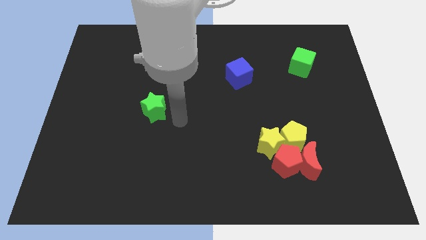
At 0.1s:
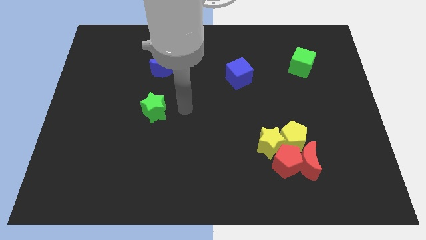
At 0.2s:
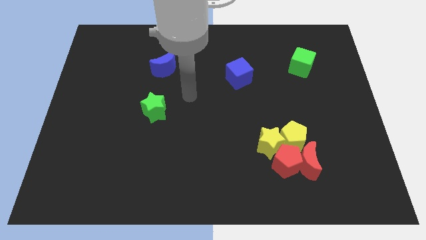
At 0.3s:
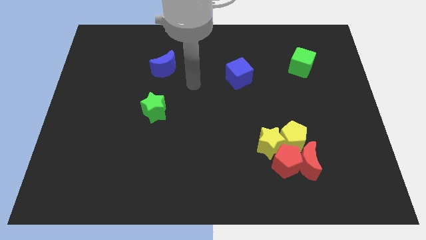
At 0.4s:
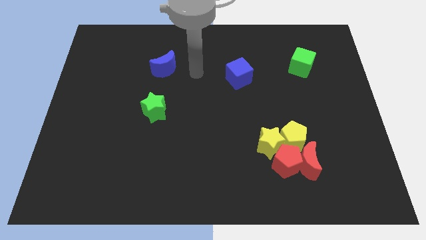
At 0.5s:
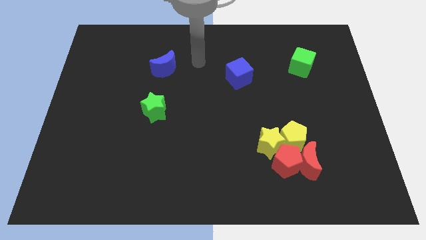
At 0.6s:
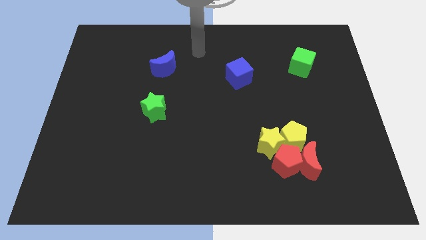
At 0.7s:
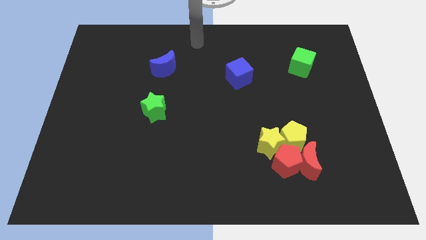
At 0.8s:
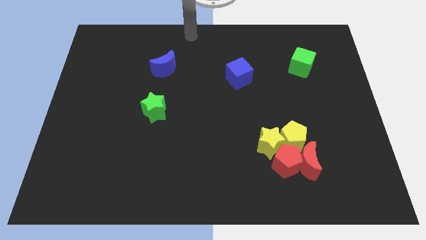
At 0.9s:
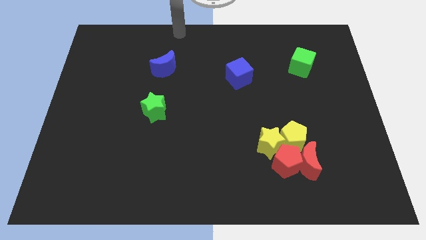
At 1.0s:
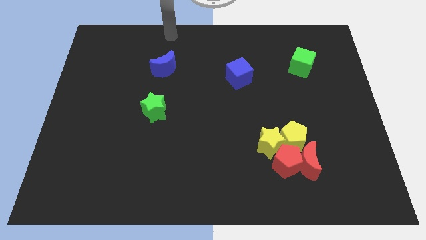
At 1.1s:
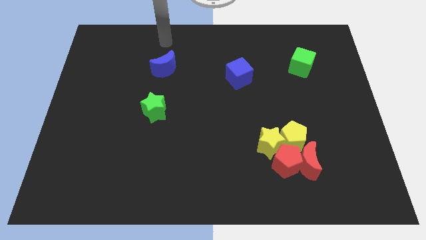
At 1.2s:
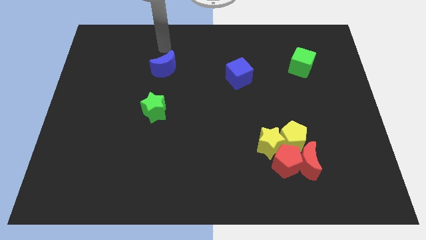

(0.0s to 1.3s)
go and point your arm at the top side of the blue crescent

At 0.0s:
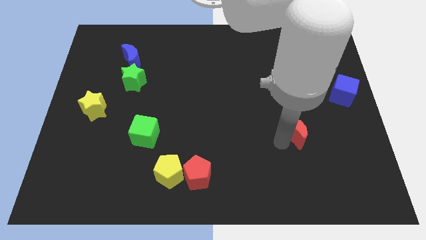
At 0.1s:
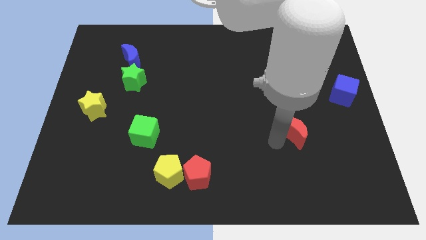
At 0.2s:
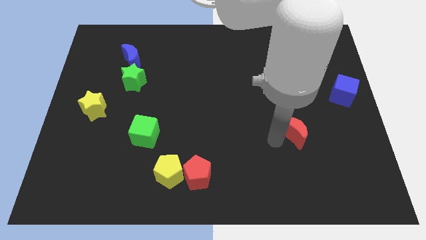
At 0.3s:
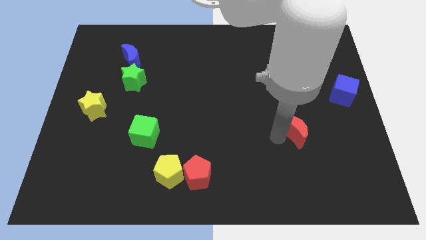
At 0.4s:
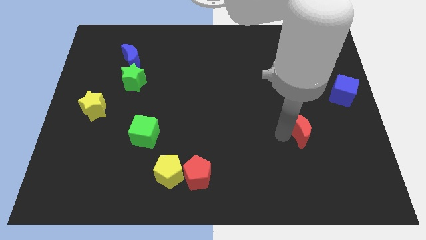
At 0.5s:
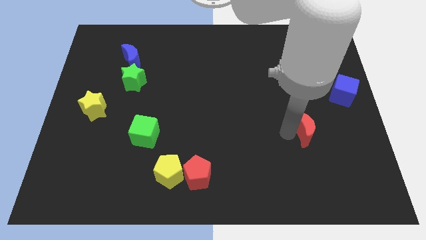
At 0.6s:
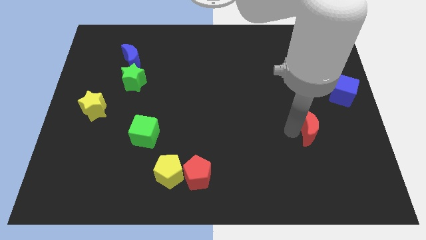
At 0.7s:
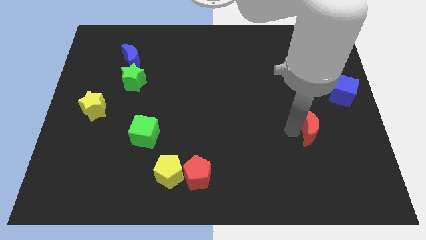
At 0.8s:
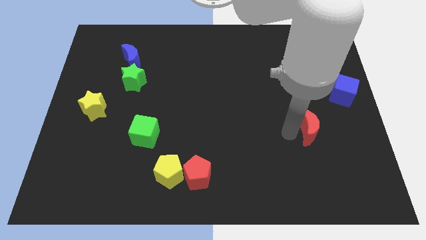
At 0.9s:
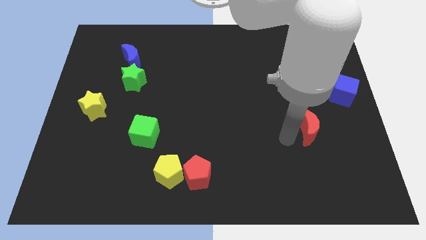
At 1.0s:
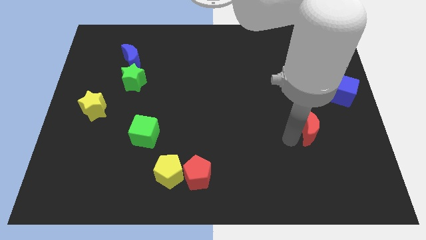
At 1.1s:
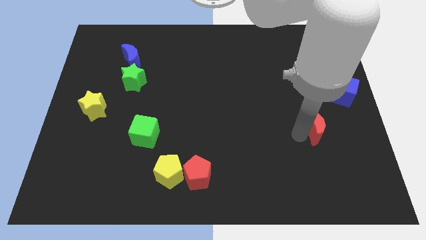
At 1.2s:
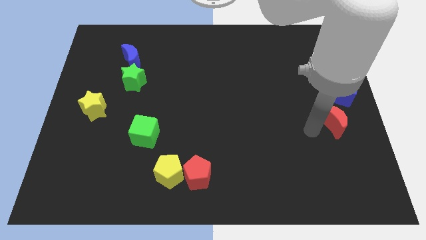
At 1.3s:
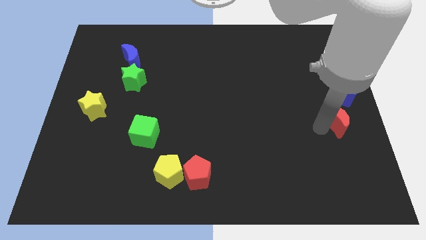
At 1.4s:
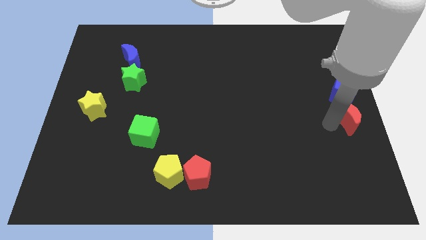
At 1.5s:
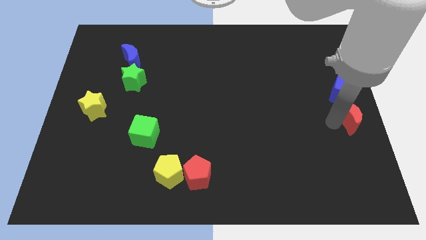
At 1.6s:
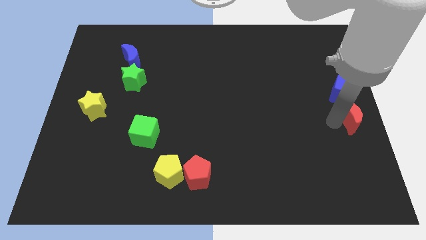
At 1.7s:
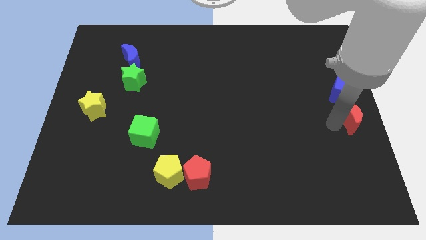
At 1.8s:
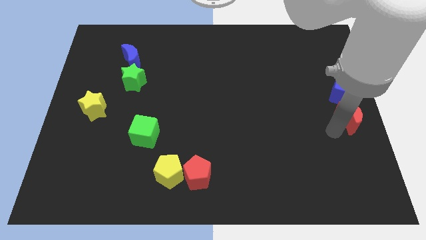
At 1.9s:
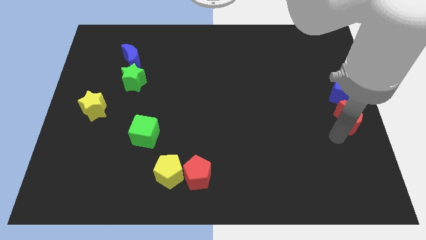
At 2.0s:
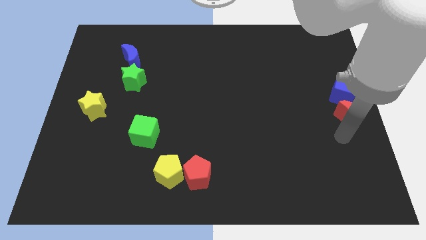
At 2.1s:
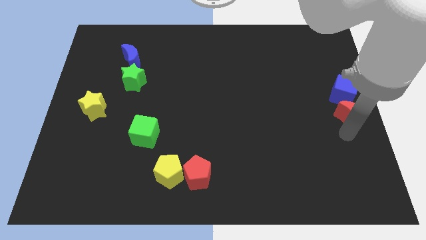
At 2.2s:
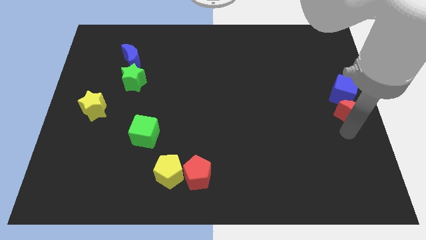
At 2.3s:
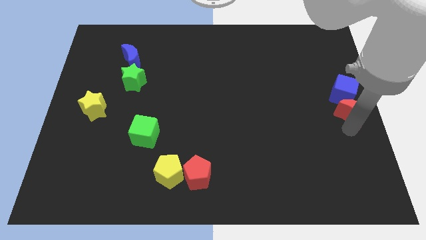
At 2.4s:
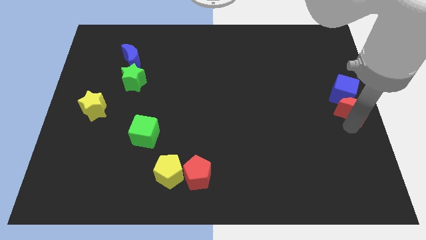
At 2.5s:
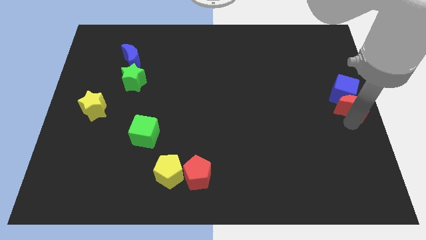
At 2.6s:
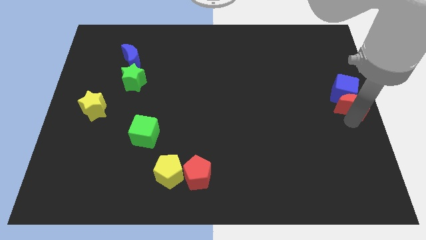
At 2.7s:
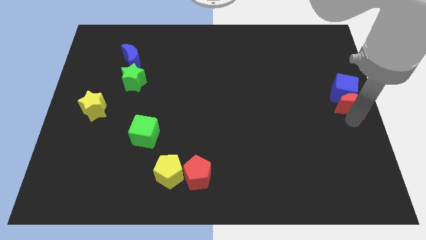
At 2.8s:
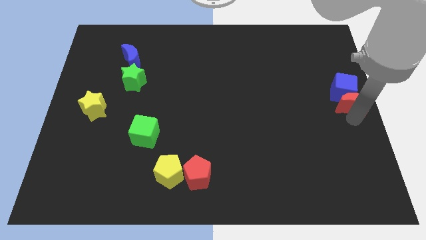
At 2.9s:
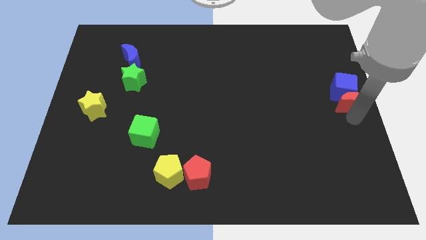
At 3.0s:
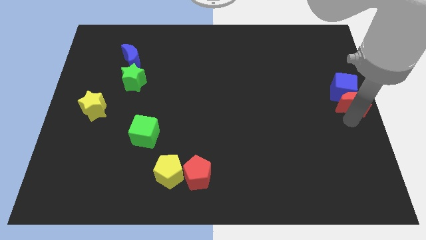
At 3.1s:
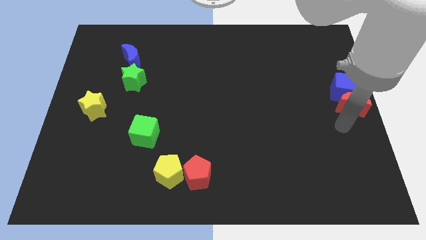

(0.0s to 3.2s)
place the red crescent below the blue cube

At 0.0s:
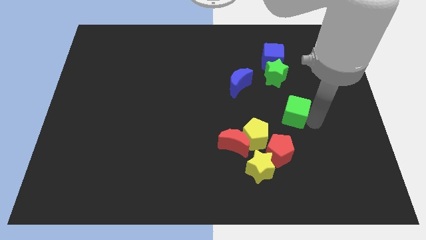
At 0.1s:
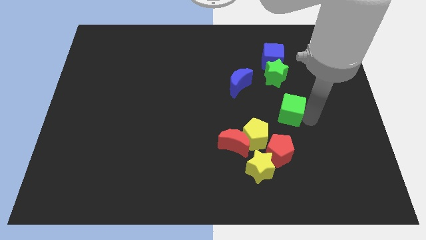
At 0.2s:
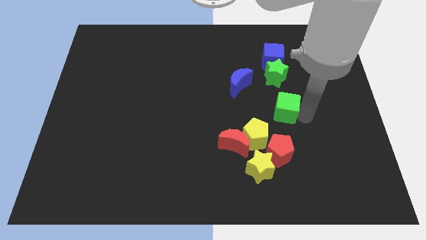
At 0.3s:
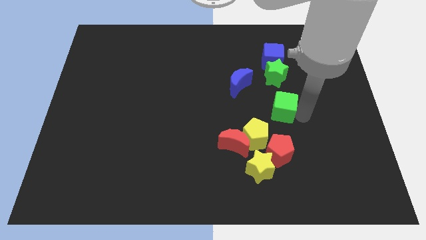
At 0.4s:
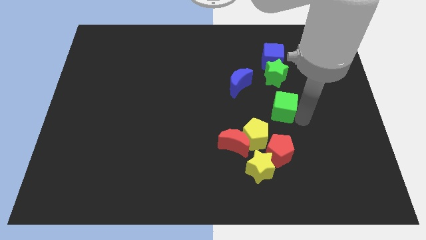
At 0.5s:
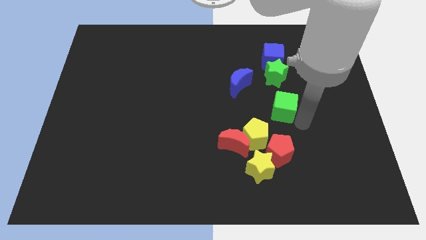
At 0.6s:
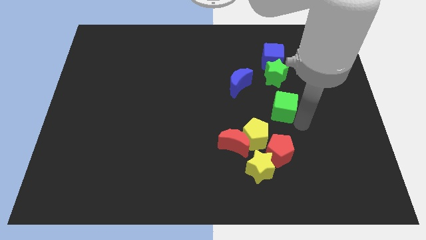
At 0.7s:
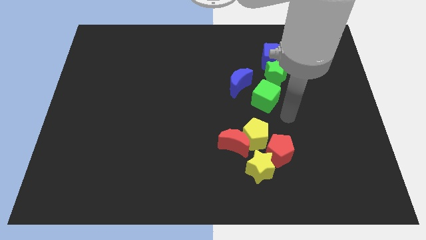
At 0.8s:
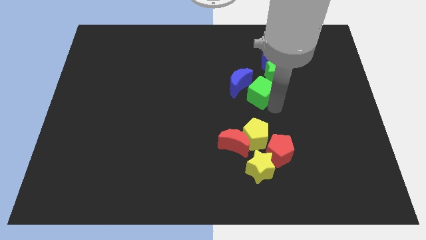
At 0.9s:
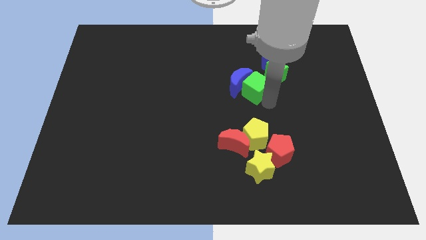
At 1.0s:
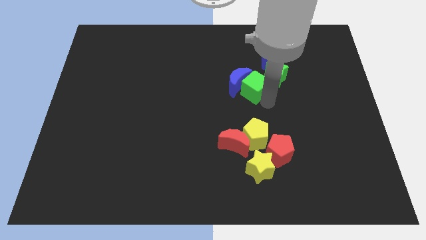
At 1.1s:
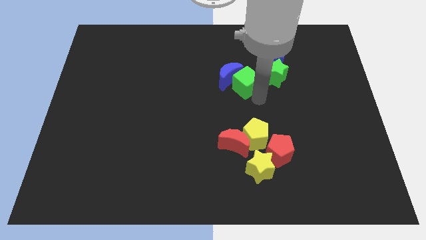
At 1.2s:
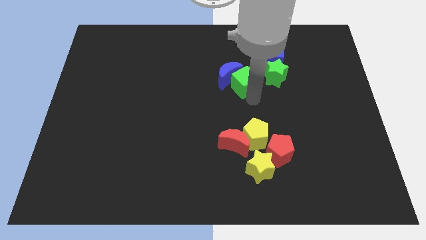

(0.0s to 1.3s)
move the green cube into the blue moon

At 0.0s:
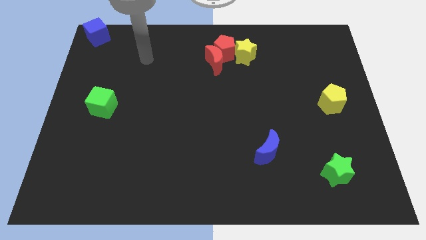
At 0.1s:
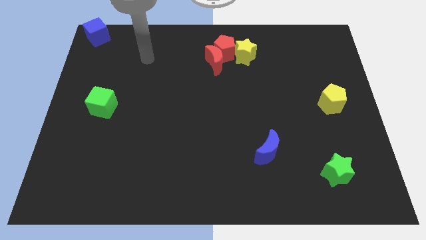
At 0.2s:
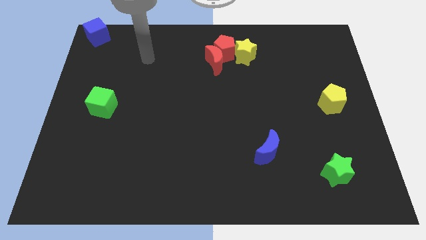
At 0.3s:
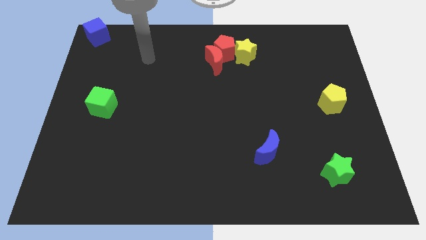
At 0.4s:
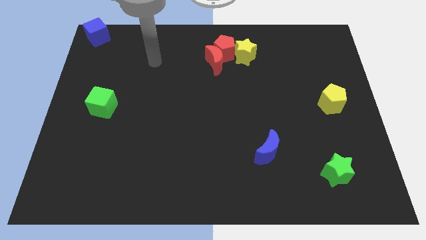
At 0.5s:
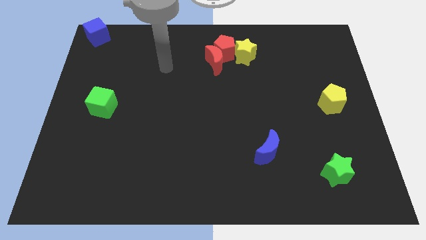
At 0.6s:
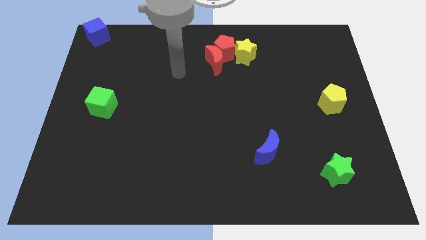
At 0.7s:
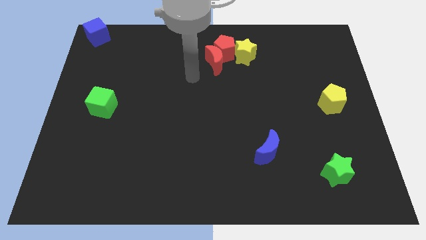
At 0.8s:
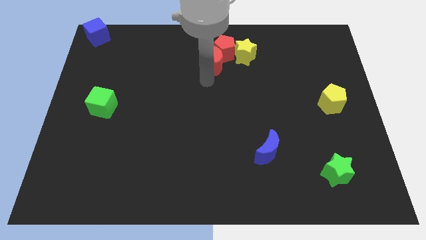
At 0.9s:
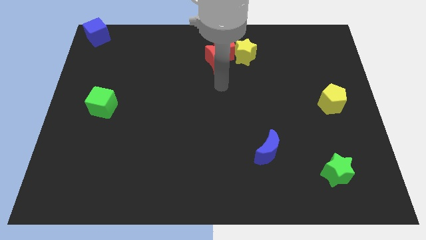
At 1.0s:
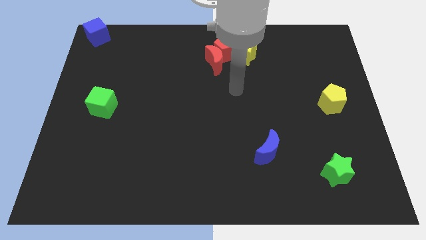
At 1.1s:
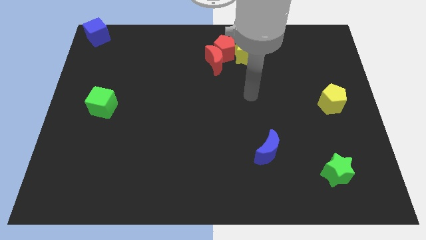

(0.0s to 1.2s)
place the arm in the center

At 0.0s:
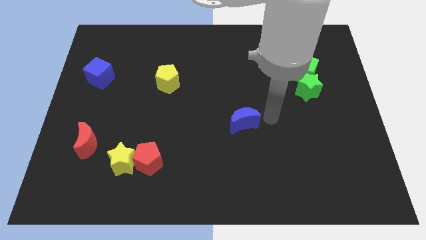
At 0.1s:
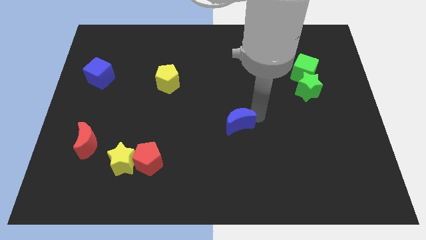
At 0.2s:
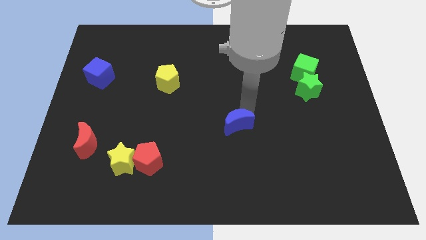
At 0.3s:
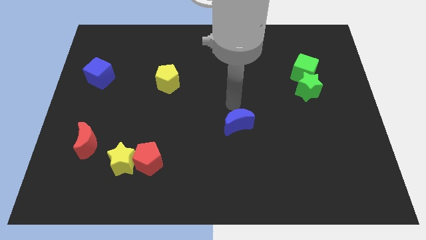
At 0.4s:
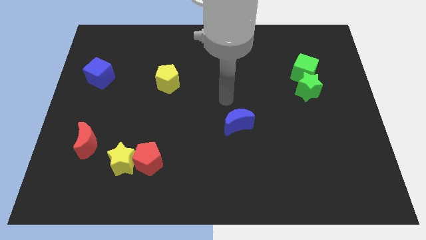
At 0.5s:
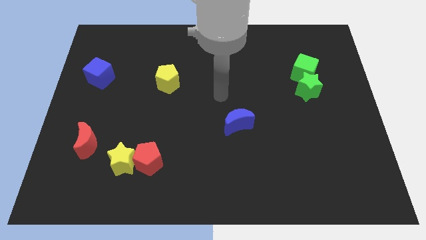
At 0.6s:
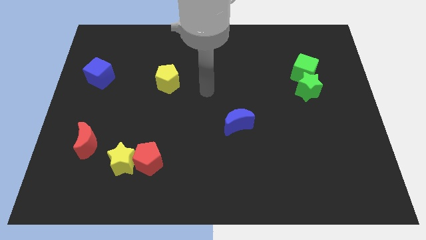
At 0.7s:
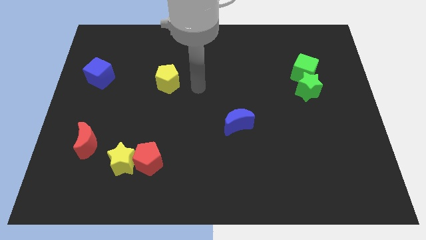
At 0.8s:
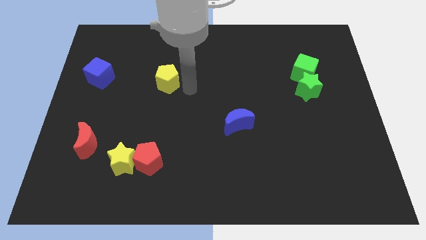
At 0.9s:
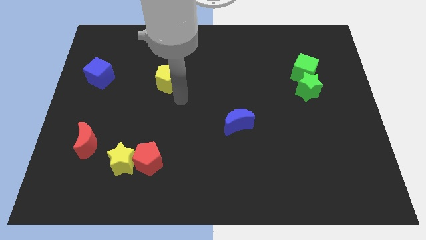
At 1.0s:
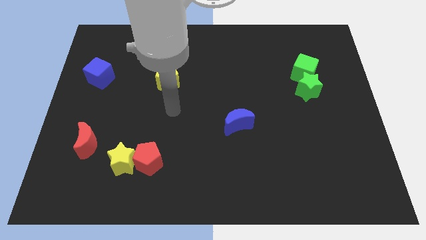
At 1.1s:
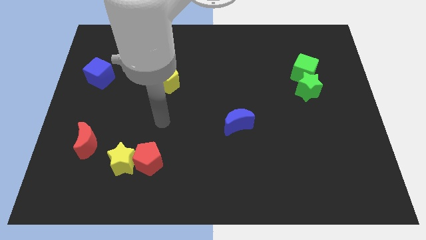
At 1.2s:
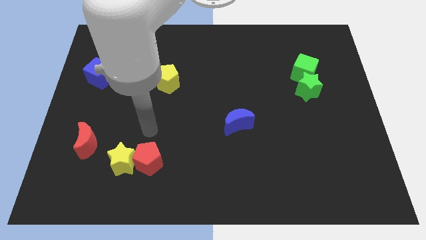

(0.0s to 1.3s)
move your arm to the top of the red pentagon

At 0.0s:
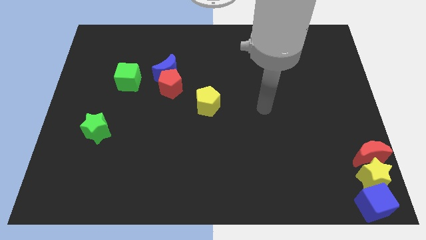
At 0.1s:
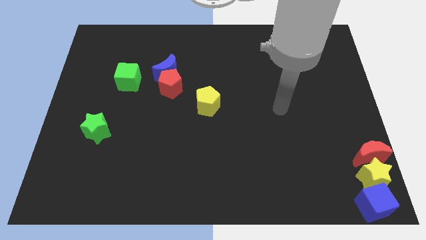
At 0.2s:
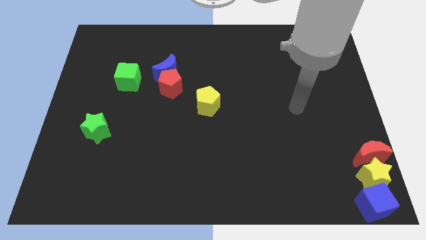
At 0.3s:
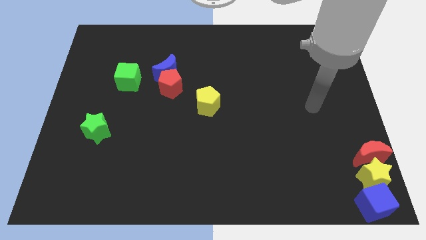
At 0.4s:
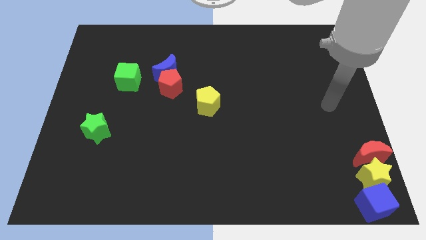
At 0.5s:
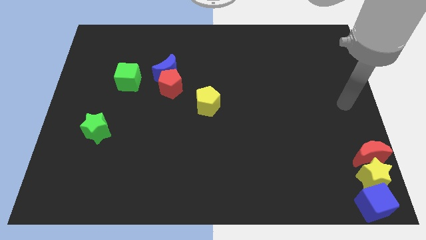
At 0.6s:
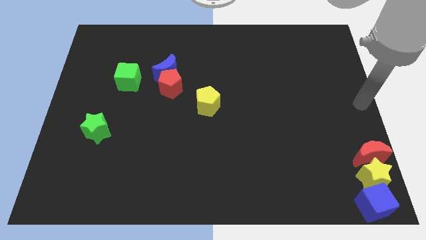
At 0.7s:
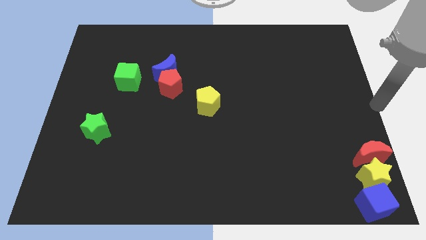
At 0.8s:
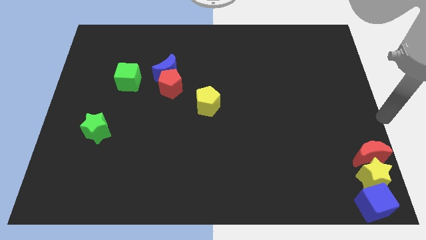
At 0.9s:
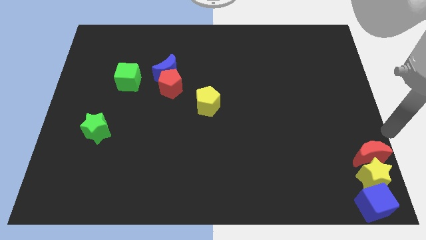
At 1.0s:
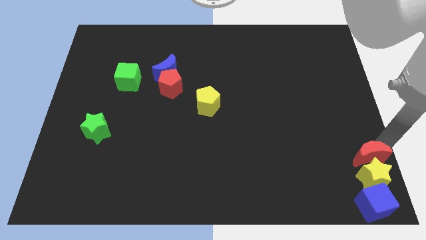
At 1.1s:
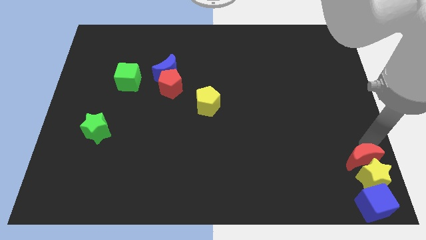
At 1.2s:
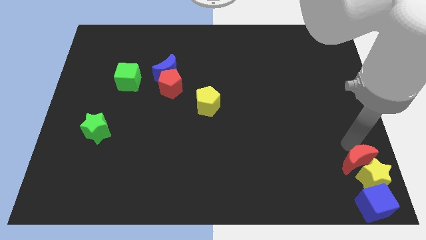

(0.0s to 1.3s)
move your hand towards the red crescent
